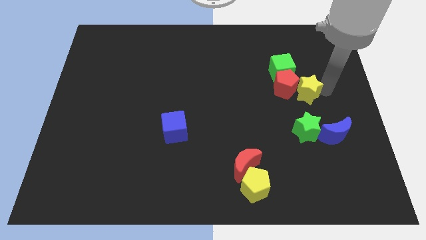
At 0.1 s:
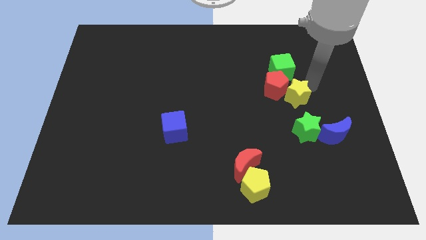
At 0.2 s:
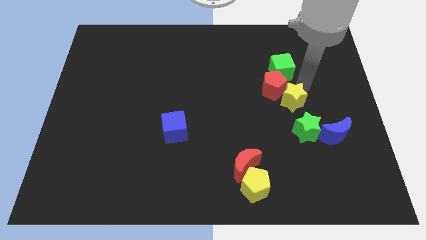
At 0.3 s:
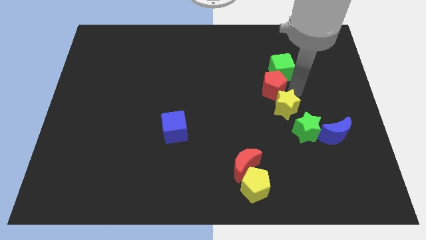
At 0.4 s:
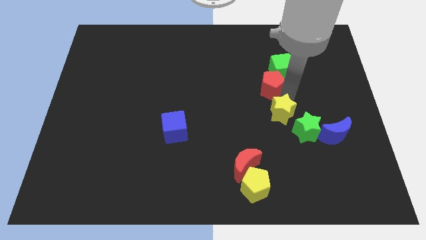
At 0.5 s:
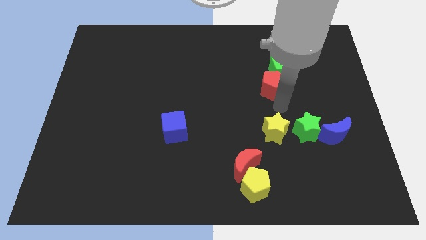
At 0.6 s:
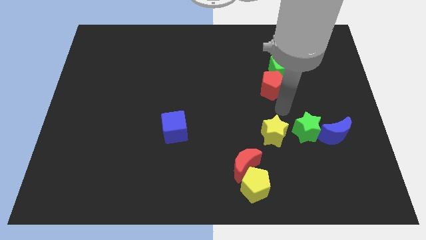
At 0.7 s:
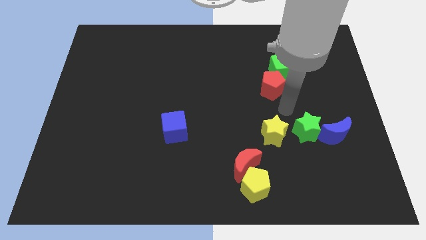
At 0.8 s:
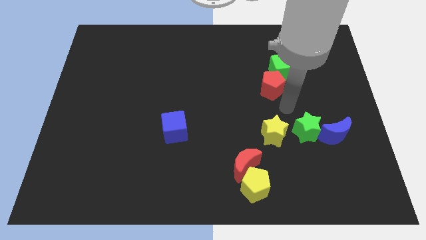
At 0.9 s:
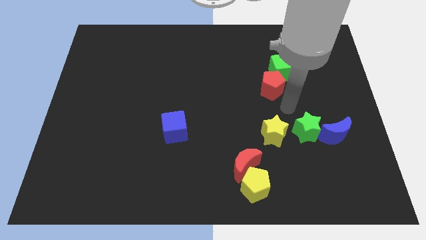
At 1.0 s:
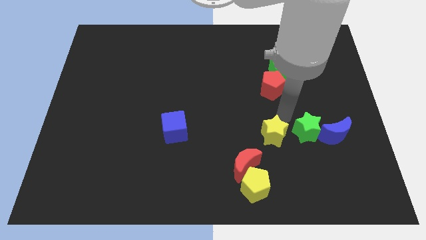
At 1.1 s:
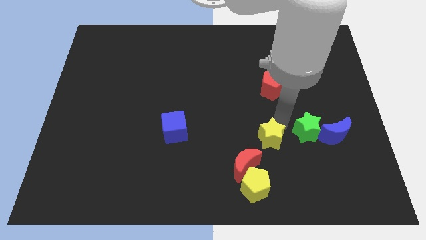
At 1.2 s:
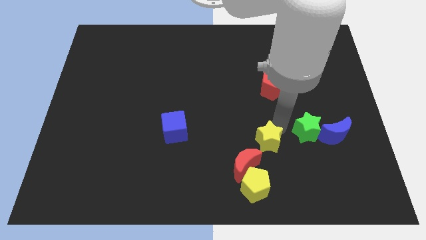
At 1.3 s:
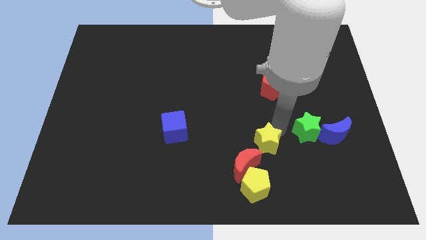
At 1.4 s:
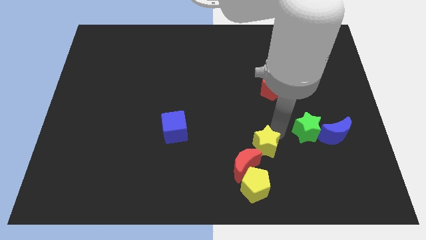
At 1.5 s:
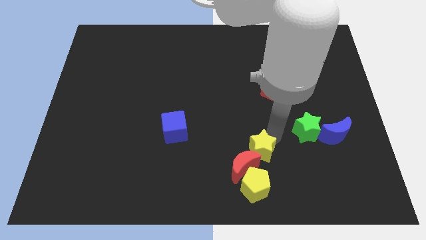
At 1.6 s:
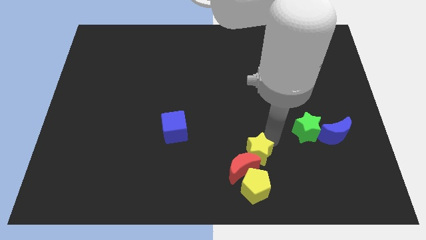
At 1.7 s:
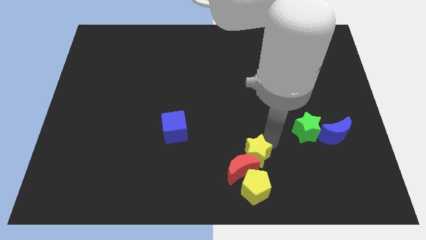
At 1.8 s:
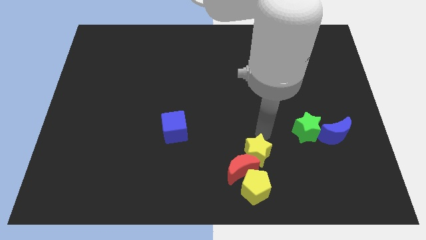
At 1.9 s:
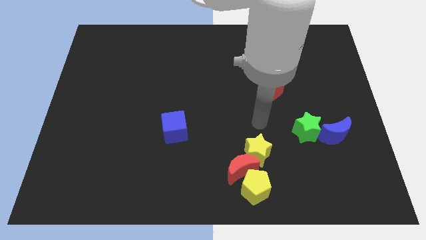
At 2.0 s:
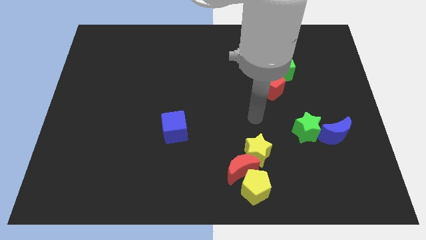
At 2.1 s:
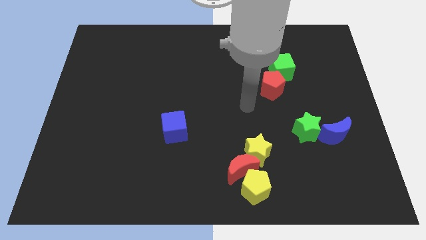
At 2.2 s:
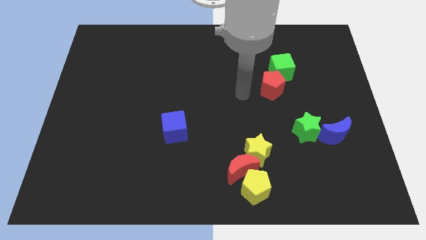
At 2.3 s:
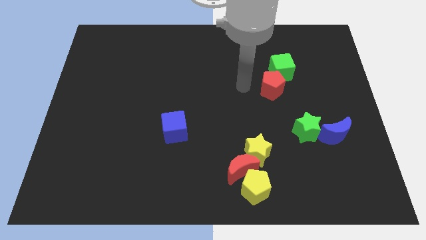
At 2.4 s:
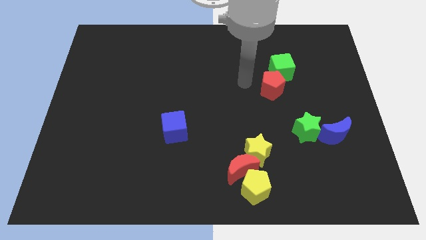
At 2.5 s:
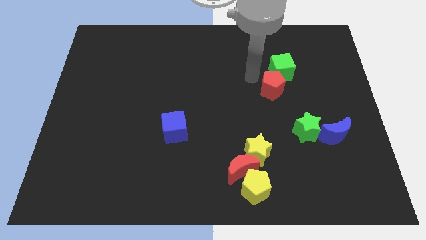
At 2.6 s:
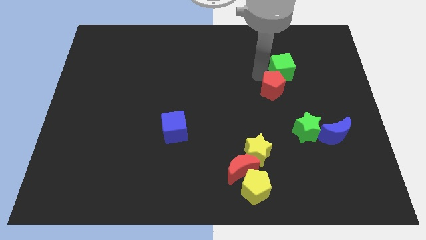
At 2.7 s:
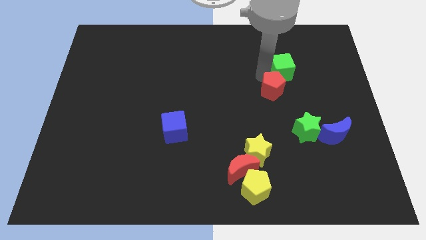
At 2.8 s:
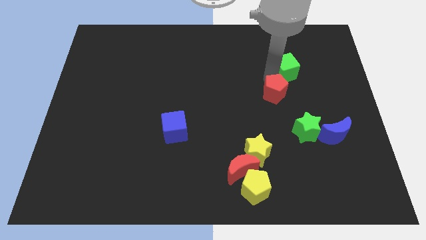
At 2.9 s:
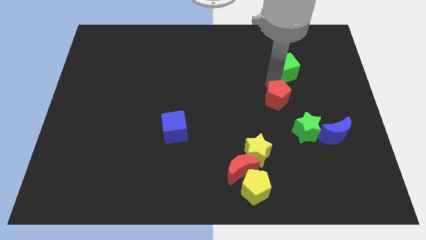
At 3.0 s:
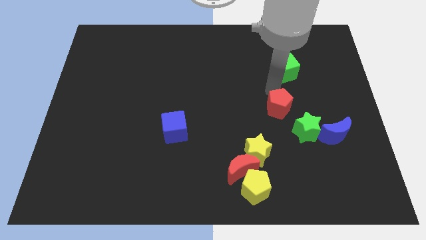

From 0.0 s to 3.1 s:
separate the yellow star from red pentagon

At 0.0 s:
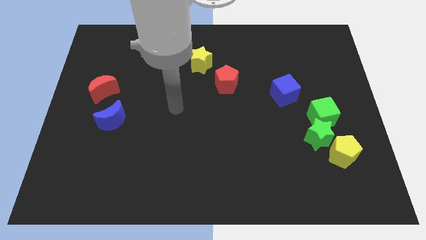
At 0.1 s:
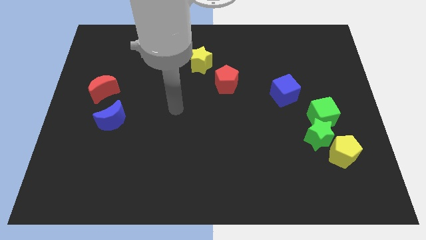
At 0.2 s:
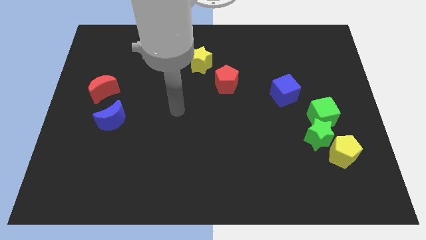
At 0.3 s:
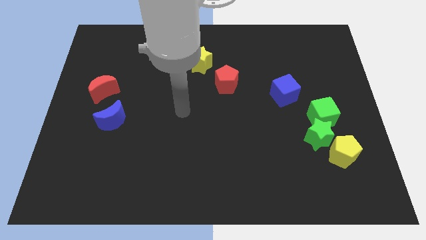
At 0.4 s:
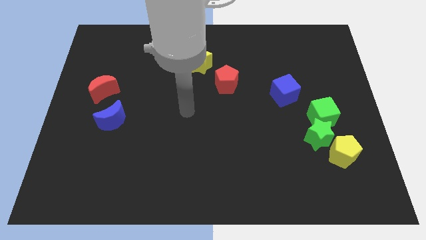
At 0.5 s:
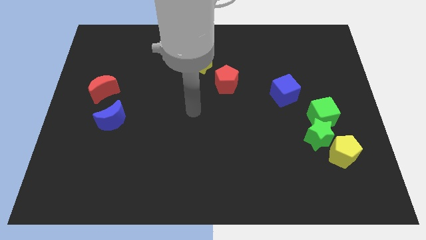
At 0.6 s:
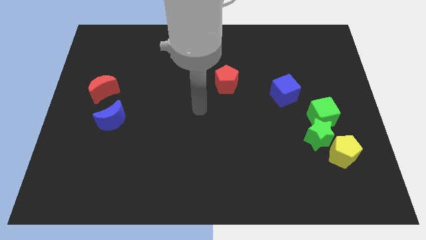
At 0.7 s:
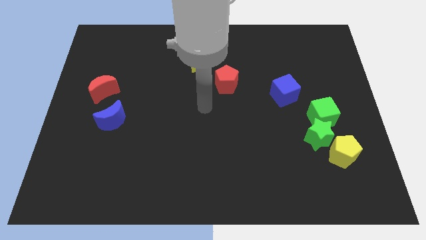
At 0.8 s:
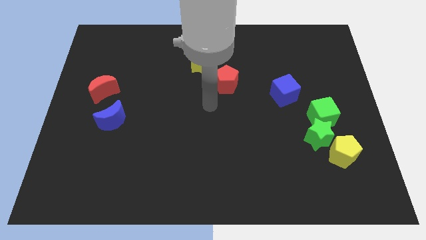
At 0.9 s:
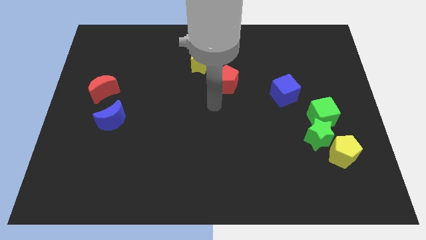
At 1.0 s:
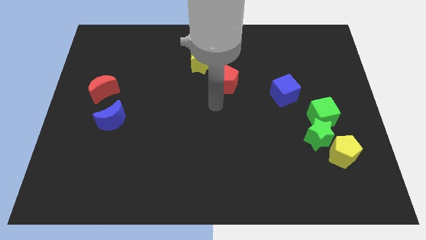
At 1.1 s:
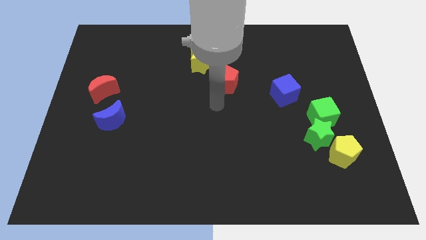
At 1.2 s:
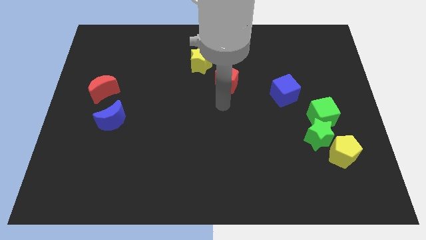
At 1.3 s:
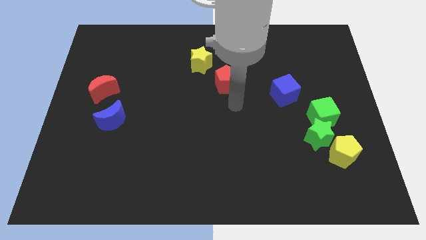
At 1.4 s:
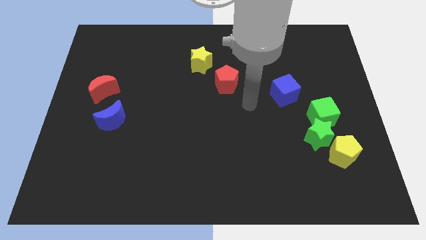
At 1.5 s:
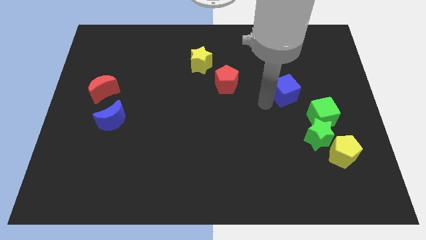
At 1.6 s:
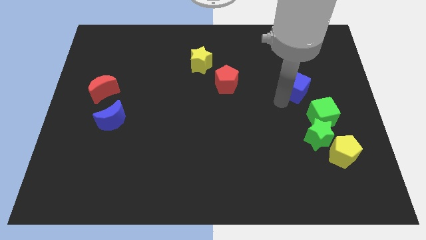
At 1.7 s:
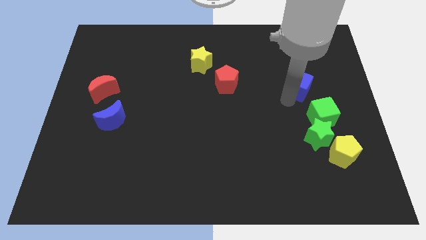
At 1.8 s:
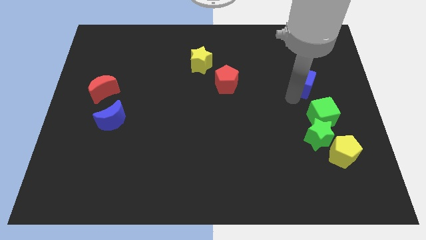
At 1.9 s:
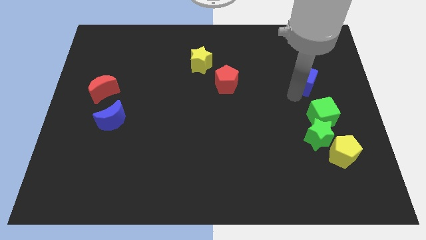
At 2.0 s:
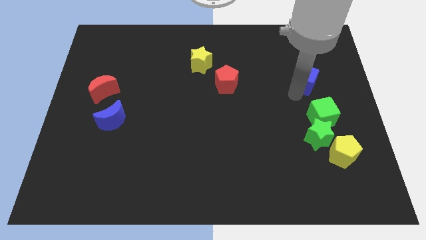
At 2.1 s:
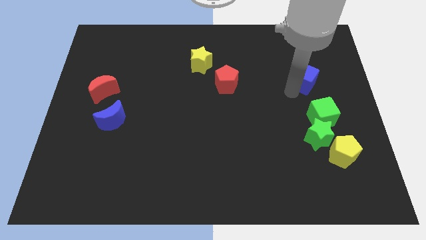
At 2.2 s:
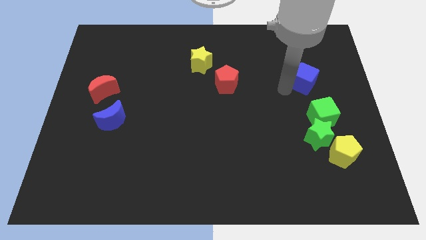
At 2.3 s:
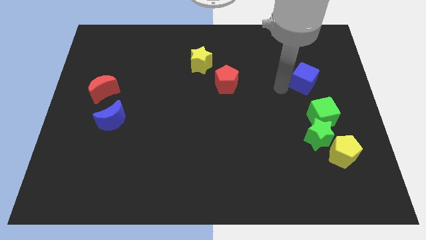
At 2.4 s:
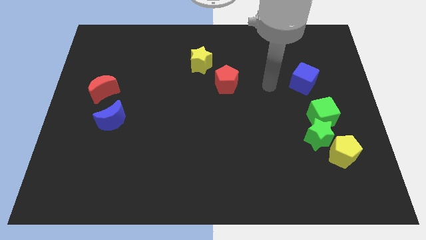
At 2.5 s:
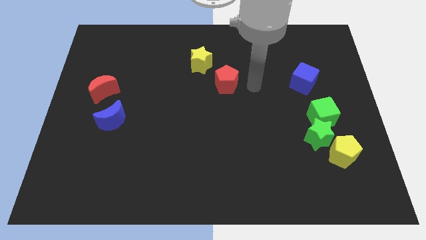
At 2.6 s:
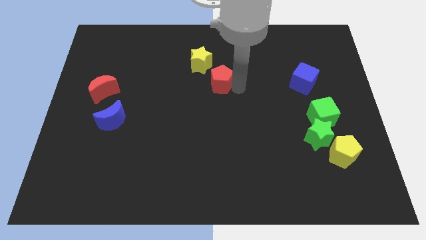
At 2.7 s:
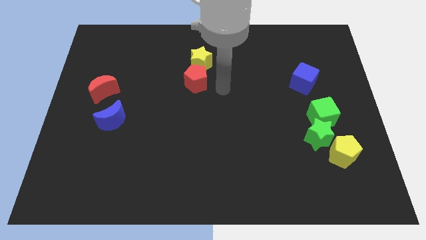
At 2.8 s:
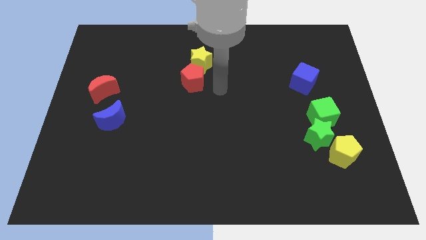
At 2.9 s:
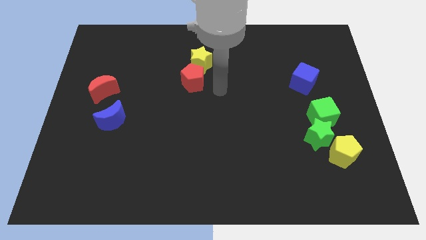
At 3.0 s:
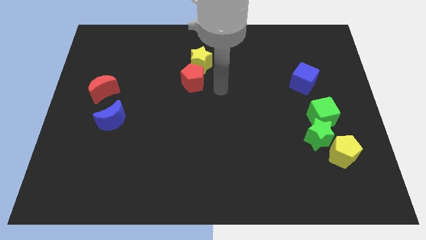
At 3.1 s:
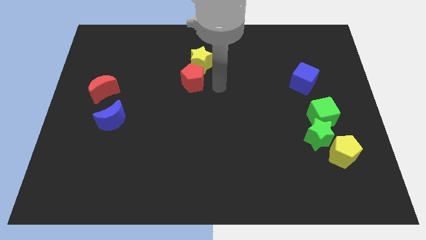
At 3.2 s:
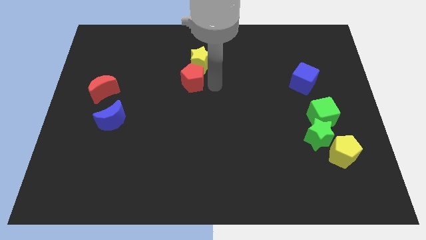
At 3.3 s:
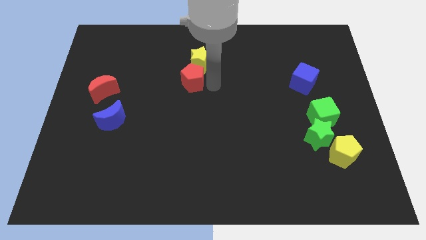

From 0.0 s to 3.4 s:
place the blue cube at the top of green cube

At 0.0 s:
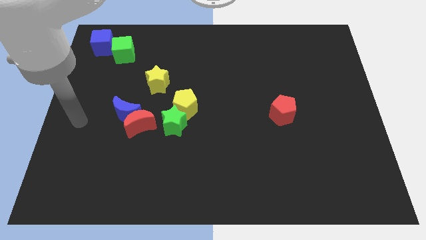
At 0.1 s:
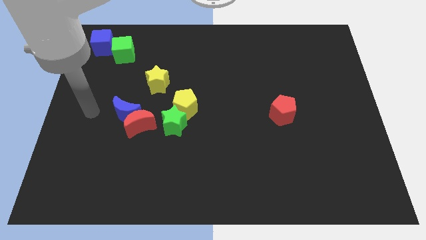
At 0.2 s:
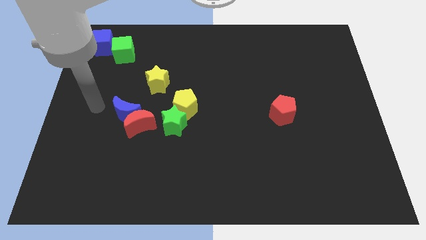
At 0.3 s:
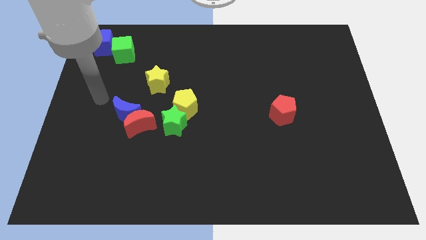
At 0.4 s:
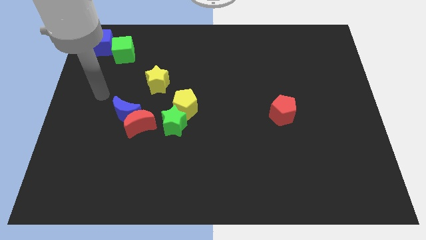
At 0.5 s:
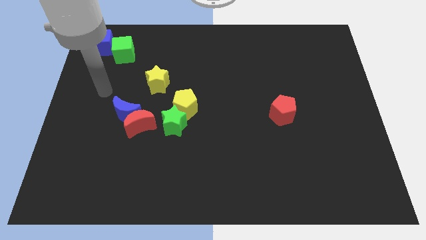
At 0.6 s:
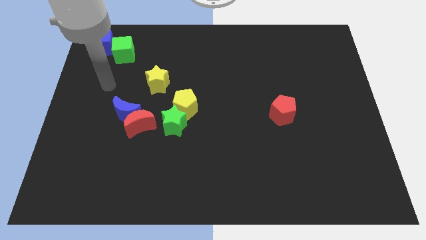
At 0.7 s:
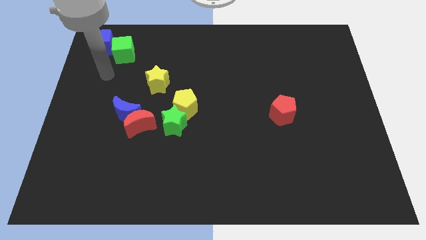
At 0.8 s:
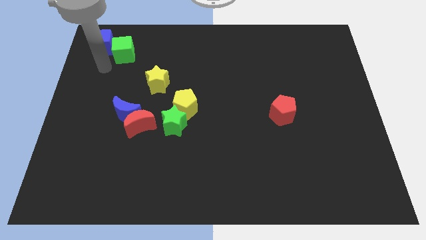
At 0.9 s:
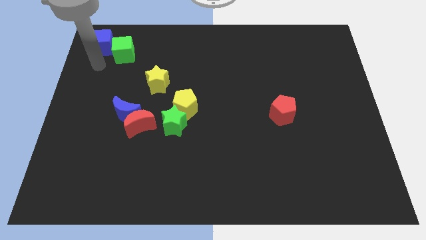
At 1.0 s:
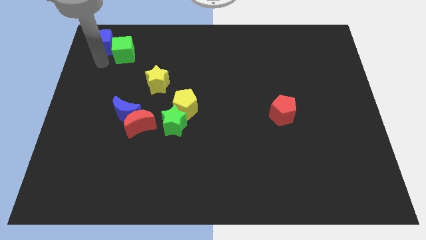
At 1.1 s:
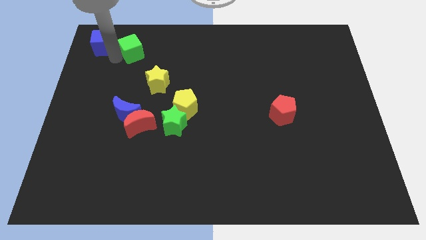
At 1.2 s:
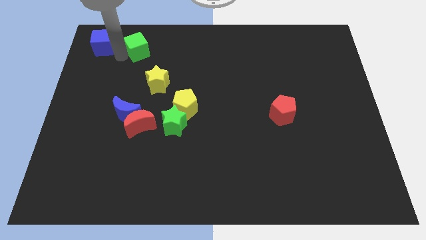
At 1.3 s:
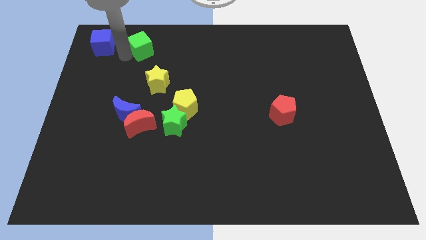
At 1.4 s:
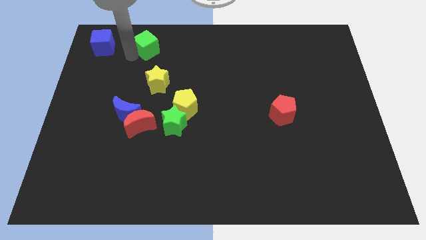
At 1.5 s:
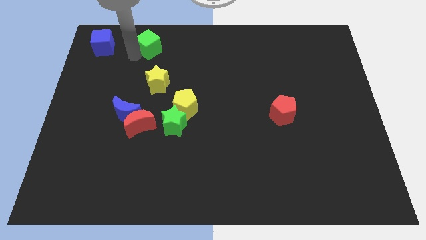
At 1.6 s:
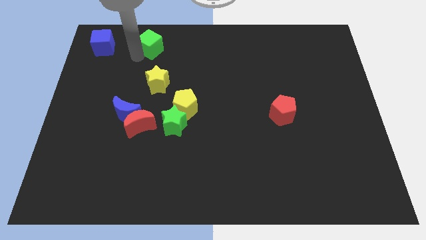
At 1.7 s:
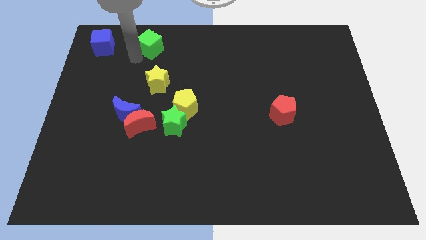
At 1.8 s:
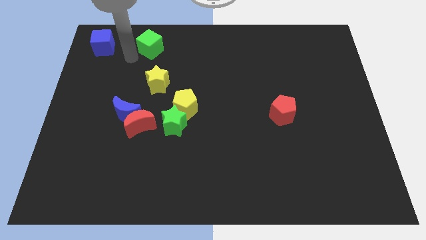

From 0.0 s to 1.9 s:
push the green cube away from the blue cube

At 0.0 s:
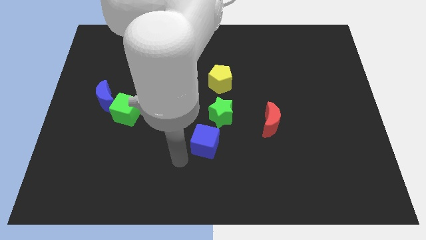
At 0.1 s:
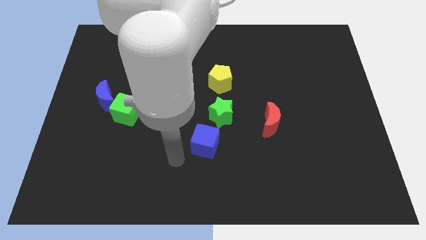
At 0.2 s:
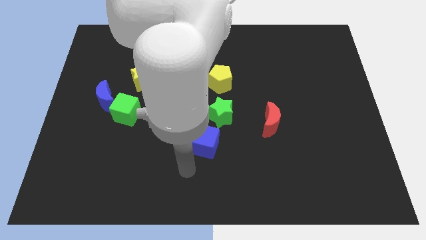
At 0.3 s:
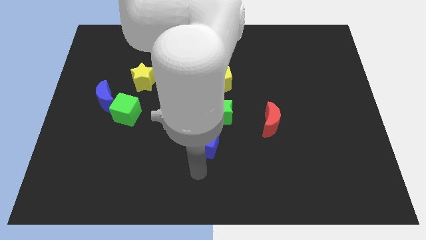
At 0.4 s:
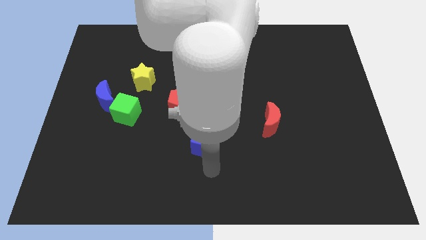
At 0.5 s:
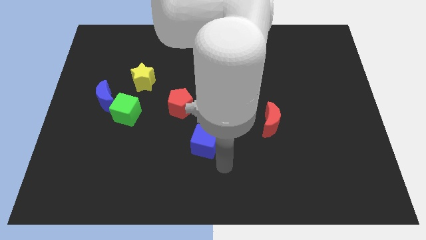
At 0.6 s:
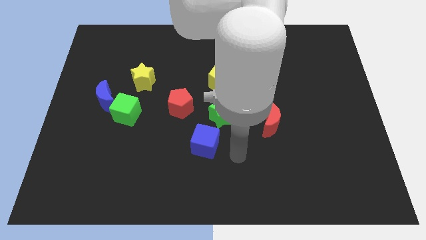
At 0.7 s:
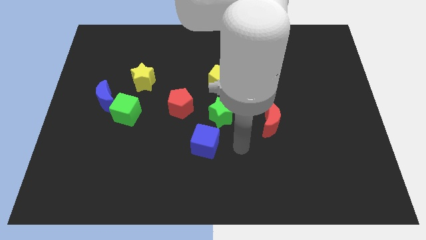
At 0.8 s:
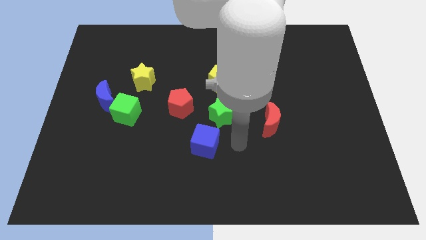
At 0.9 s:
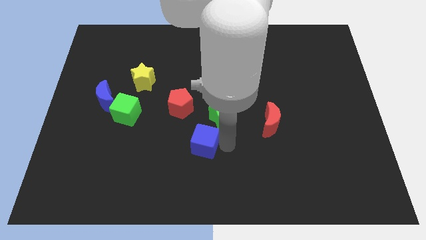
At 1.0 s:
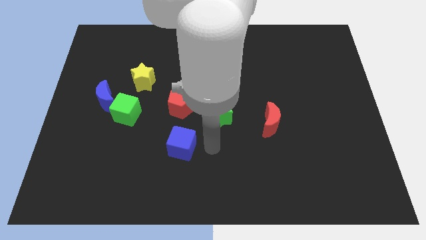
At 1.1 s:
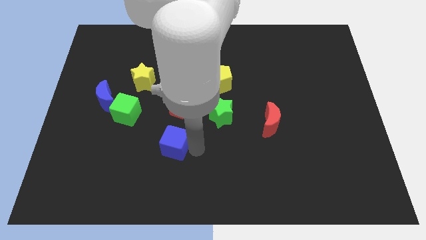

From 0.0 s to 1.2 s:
place blue cube to the bottom of red pentagon
